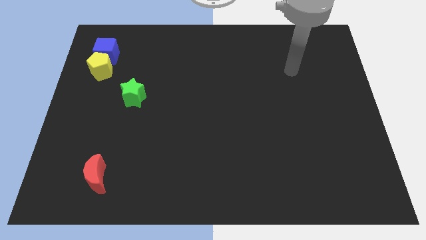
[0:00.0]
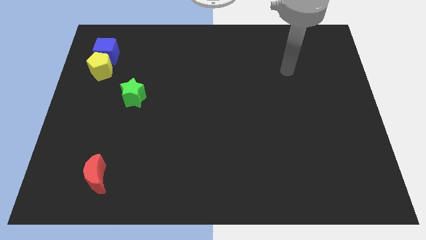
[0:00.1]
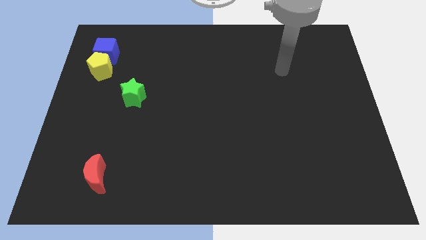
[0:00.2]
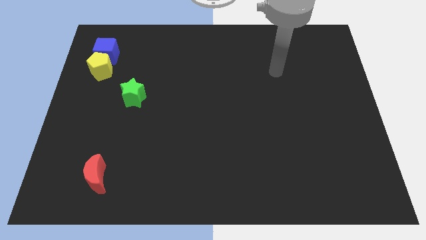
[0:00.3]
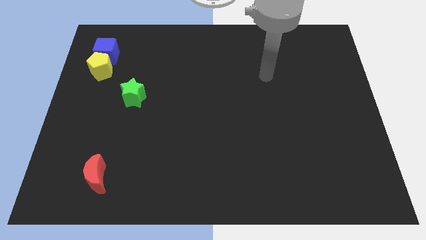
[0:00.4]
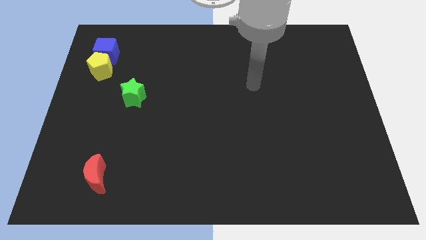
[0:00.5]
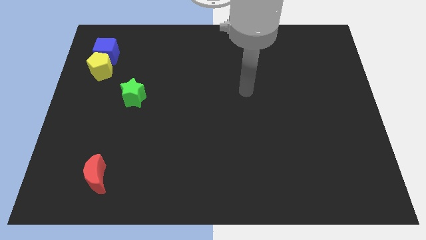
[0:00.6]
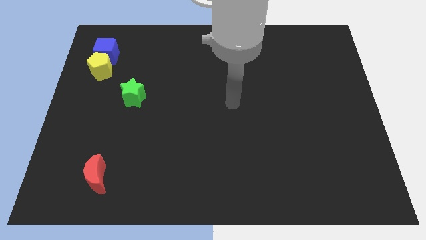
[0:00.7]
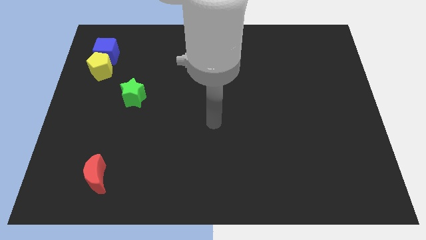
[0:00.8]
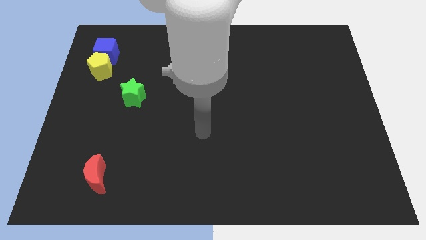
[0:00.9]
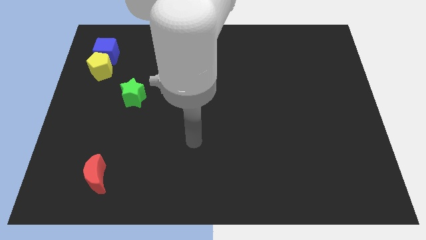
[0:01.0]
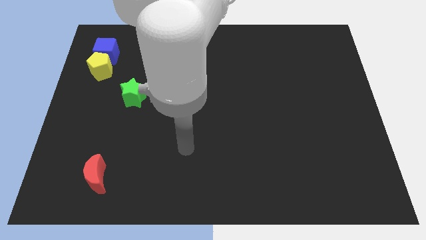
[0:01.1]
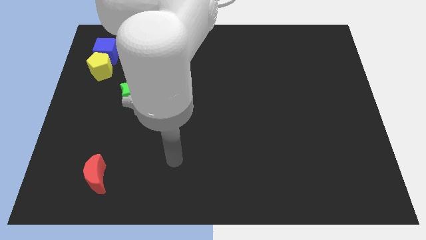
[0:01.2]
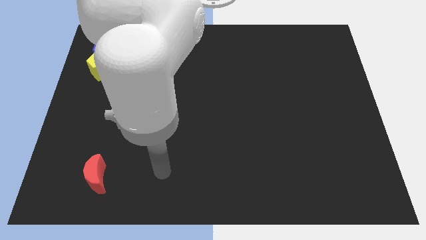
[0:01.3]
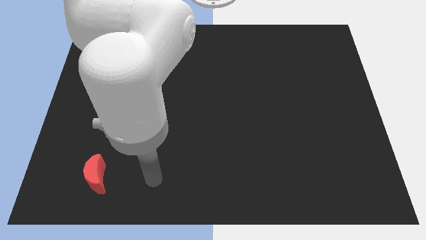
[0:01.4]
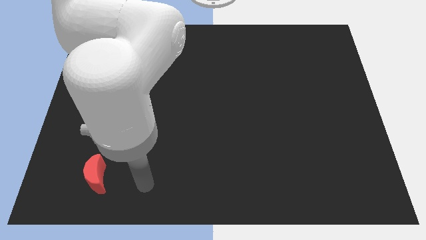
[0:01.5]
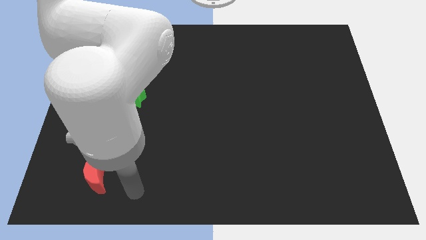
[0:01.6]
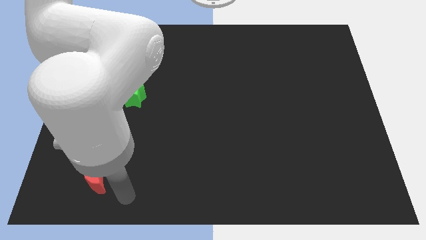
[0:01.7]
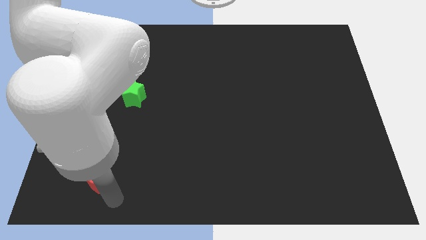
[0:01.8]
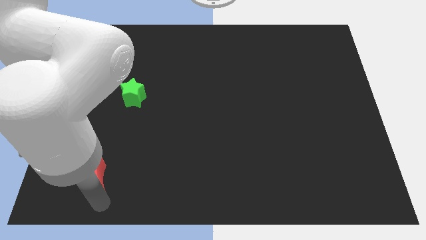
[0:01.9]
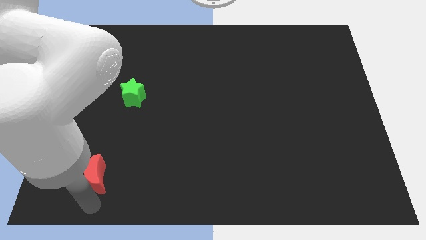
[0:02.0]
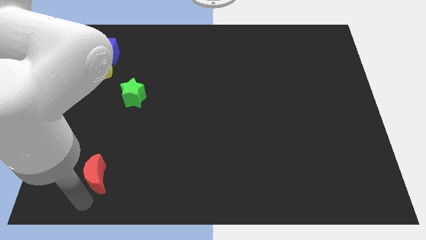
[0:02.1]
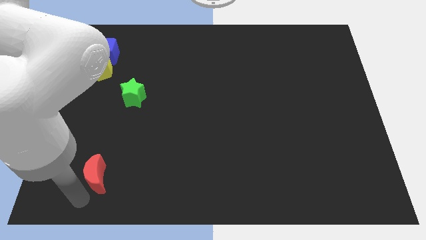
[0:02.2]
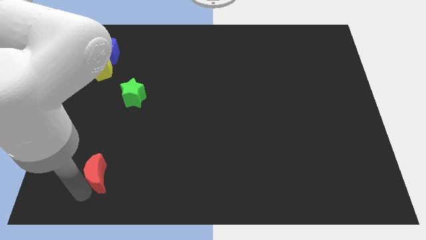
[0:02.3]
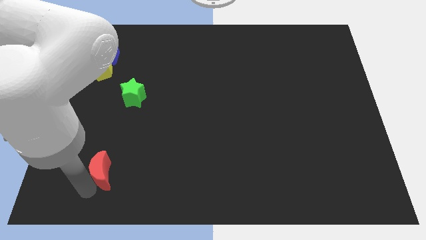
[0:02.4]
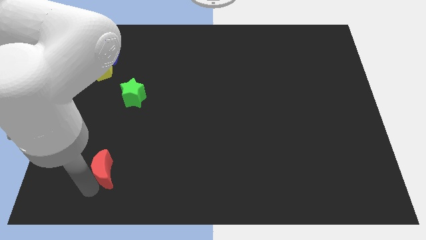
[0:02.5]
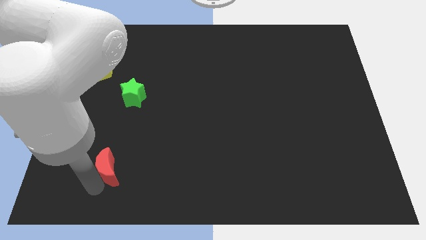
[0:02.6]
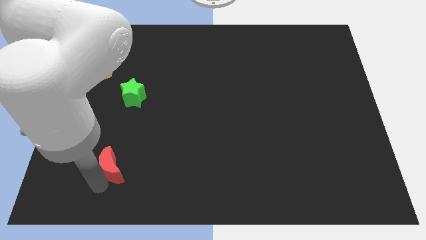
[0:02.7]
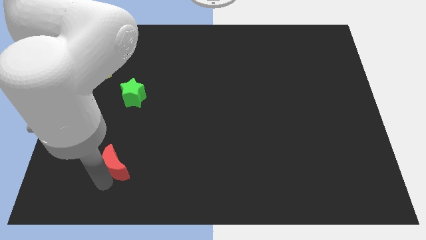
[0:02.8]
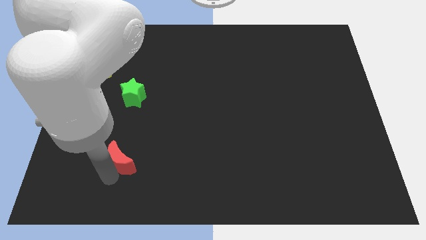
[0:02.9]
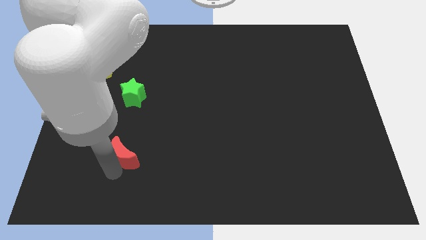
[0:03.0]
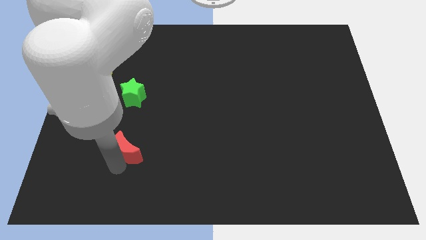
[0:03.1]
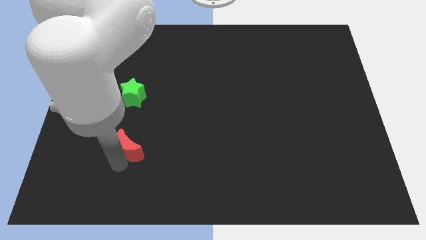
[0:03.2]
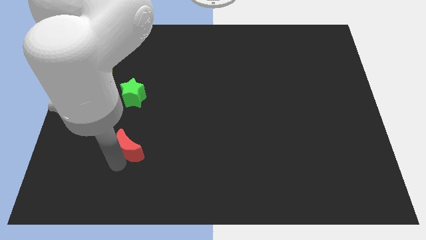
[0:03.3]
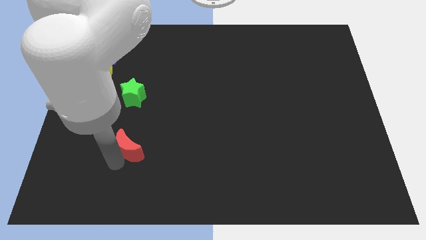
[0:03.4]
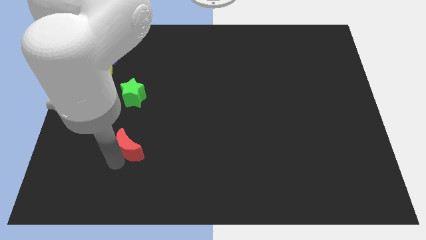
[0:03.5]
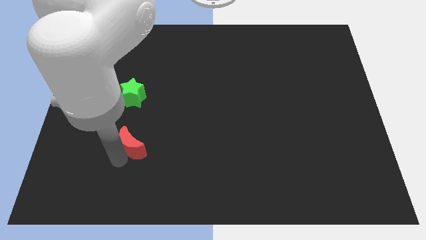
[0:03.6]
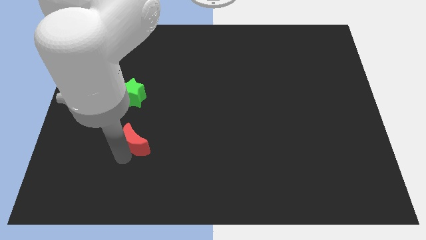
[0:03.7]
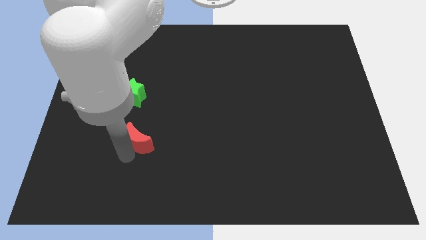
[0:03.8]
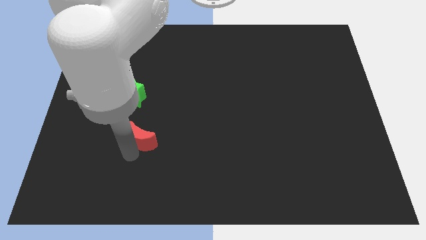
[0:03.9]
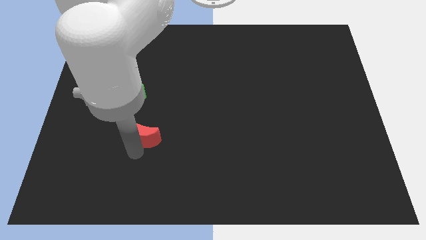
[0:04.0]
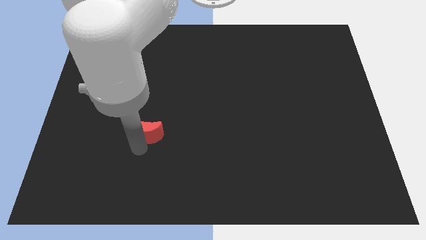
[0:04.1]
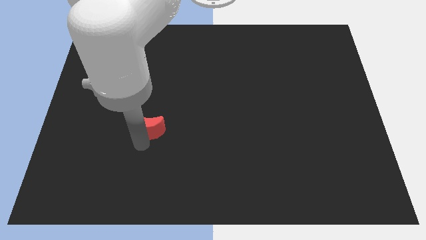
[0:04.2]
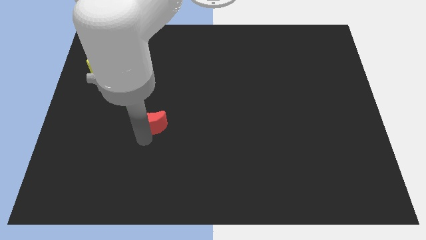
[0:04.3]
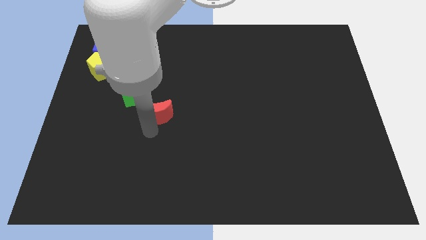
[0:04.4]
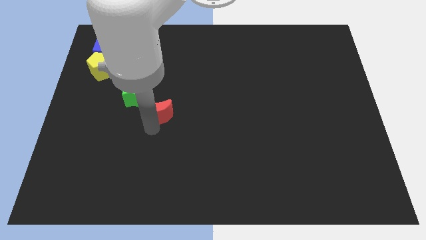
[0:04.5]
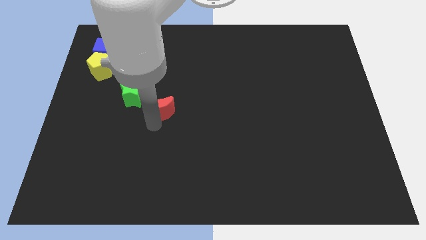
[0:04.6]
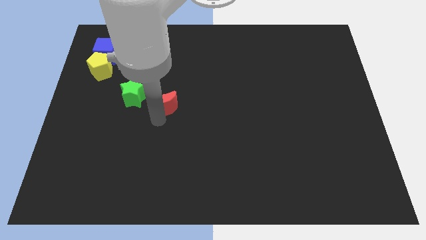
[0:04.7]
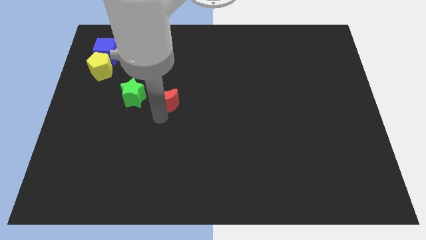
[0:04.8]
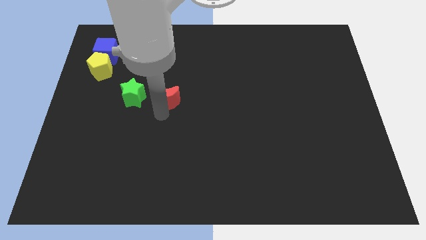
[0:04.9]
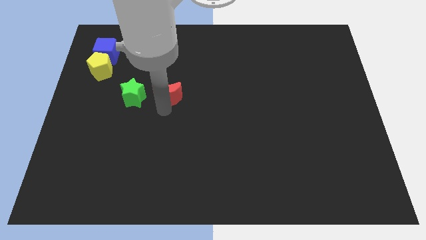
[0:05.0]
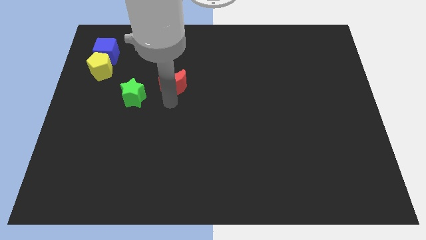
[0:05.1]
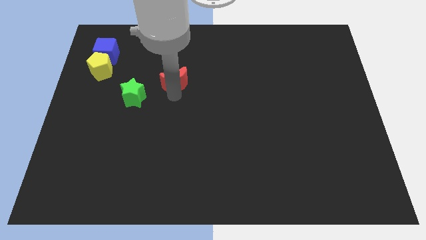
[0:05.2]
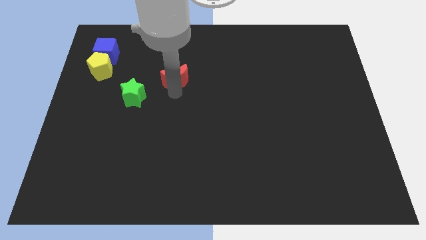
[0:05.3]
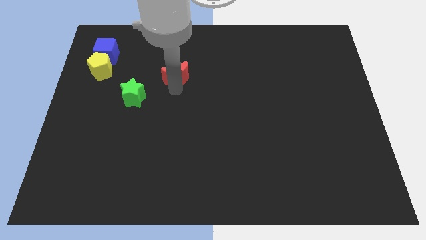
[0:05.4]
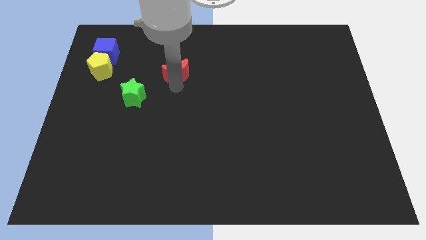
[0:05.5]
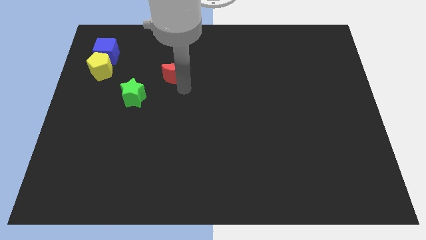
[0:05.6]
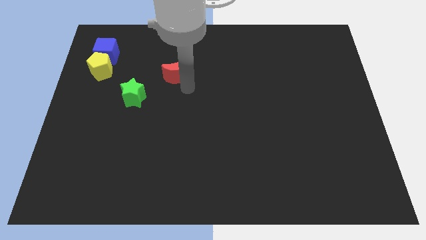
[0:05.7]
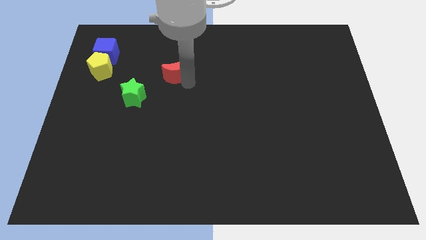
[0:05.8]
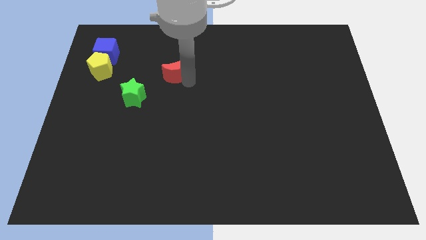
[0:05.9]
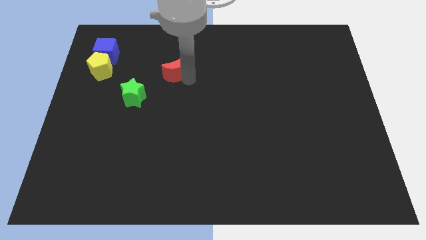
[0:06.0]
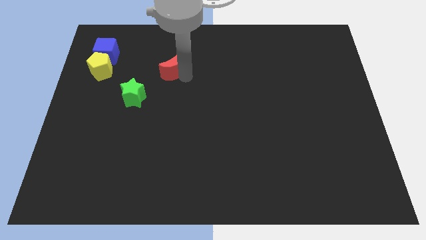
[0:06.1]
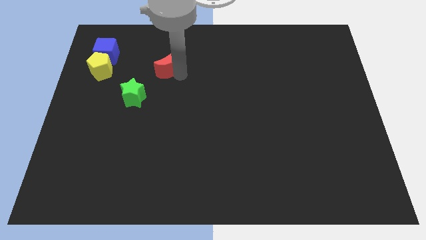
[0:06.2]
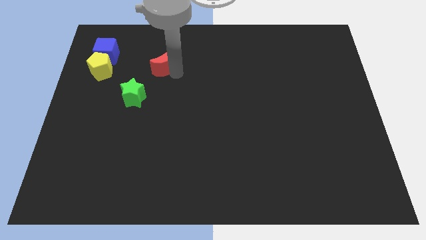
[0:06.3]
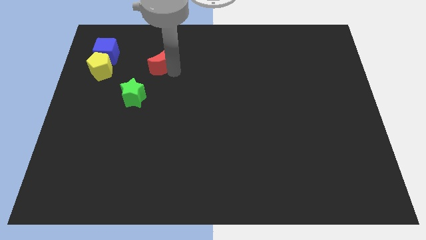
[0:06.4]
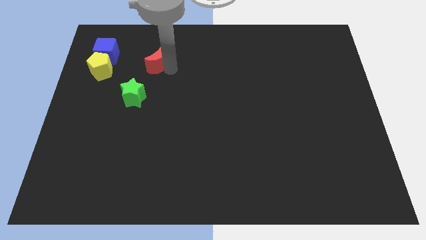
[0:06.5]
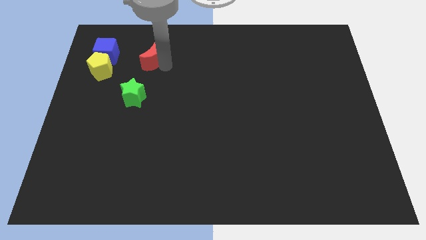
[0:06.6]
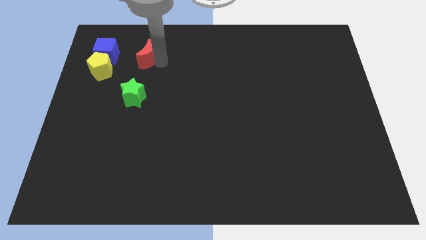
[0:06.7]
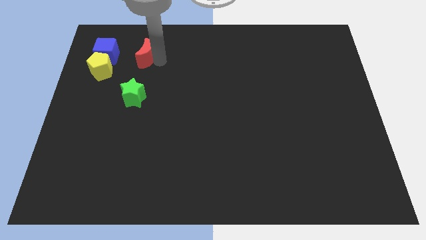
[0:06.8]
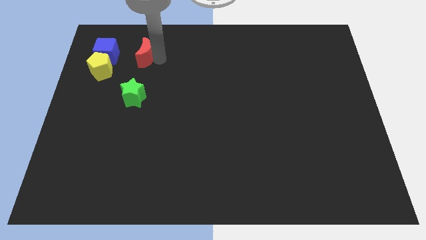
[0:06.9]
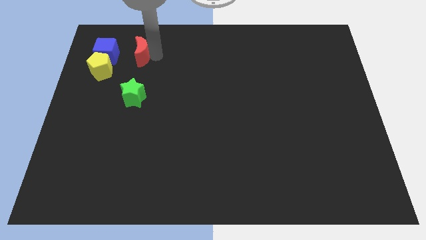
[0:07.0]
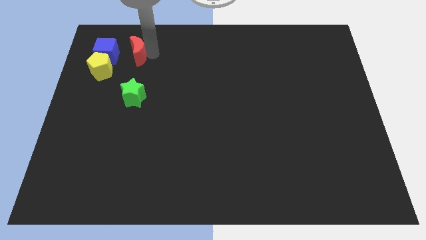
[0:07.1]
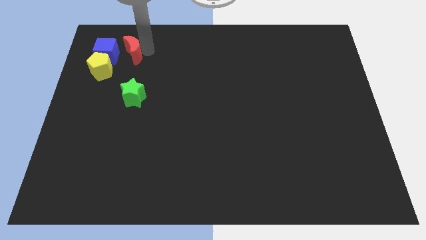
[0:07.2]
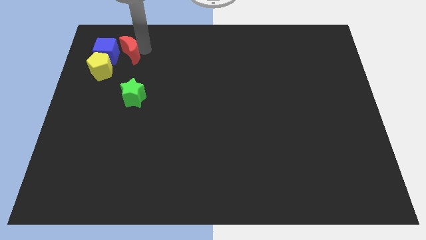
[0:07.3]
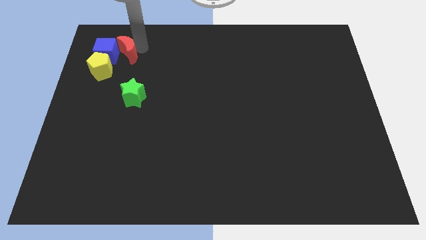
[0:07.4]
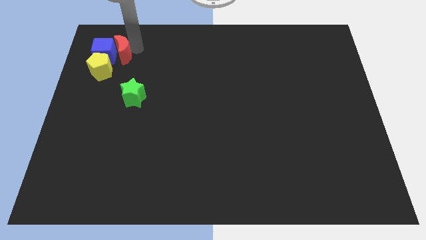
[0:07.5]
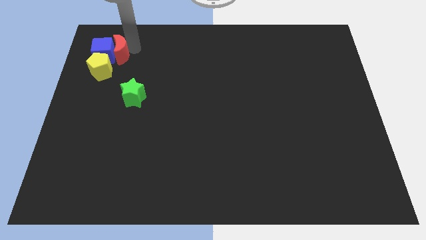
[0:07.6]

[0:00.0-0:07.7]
move the red moon next to the cube

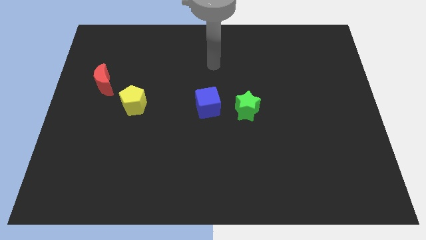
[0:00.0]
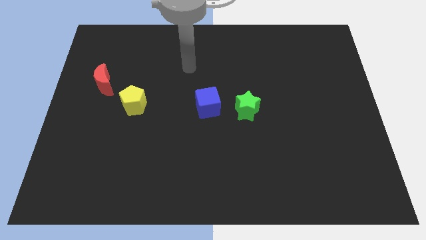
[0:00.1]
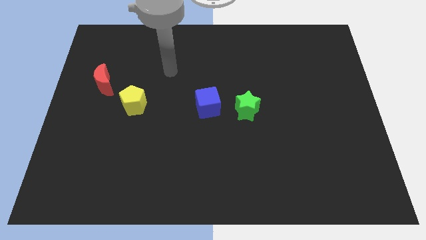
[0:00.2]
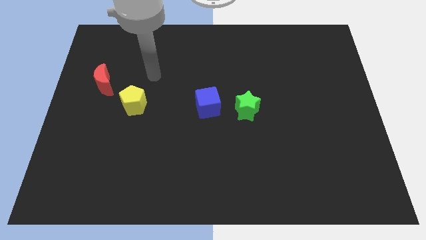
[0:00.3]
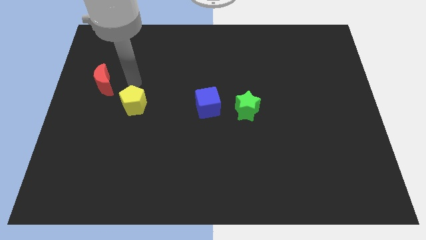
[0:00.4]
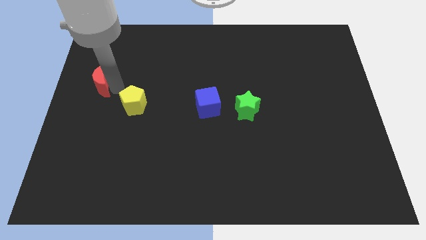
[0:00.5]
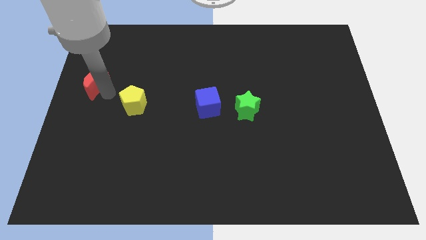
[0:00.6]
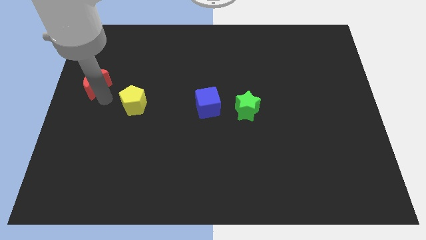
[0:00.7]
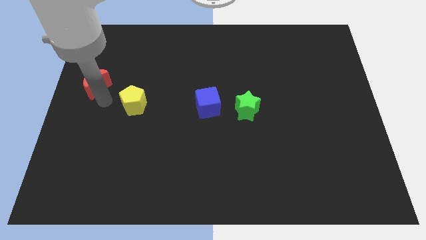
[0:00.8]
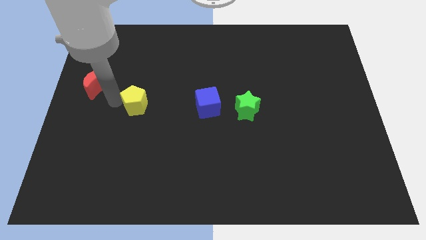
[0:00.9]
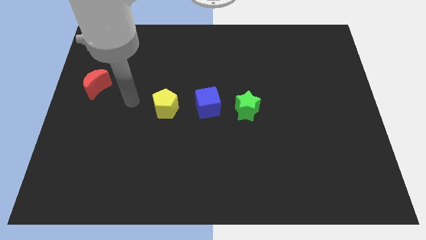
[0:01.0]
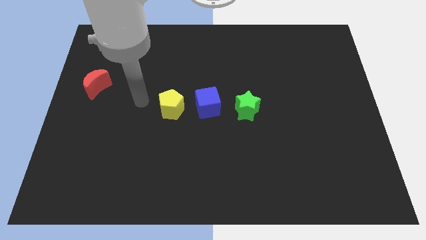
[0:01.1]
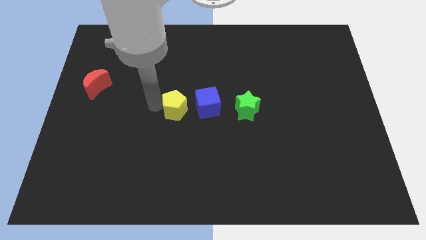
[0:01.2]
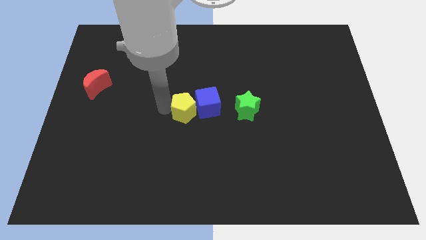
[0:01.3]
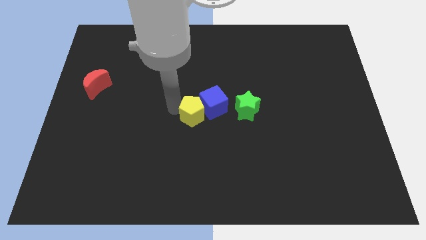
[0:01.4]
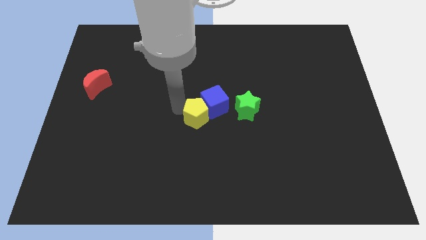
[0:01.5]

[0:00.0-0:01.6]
put the pentagon next to the cube
